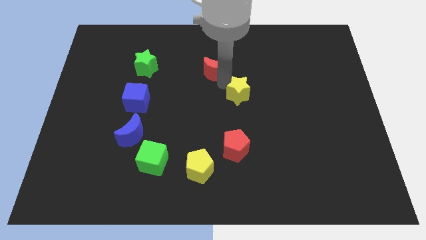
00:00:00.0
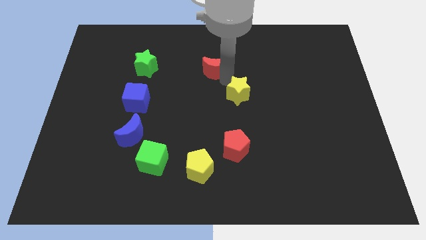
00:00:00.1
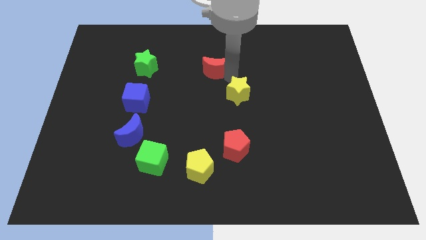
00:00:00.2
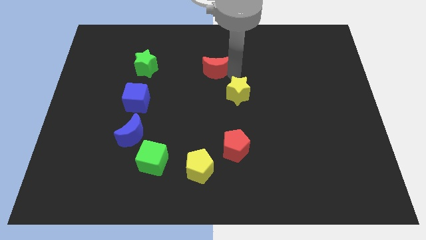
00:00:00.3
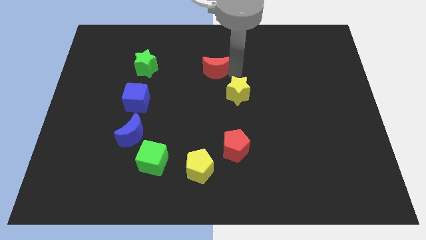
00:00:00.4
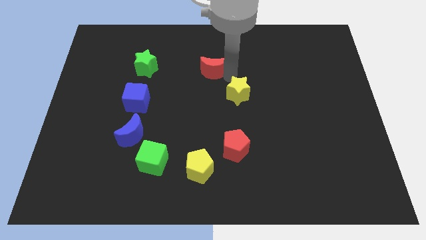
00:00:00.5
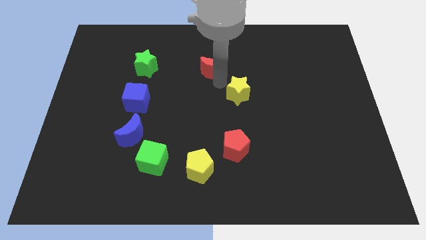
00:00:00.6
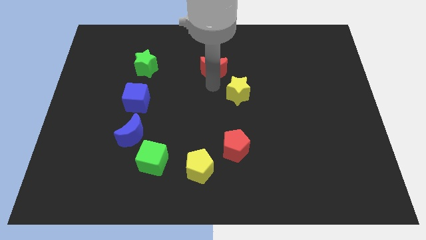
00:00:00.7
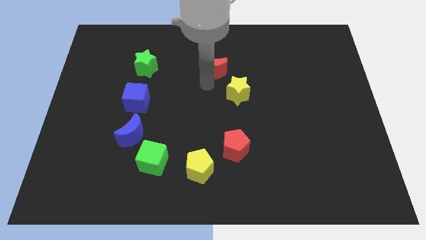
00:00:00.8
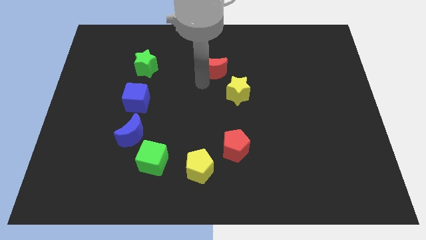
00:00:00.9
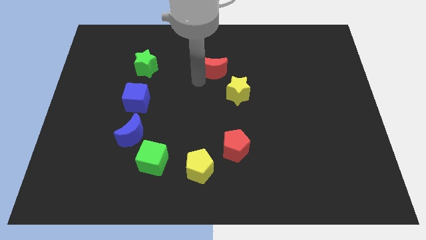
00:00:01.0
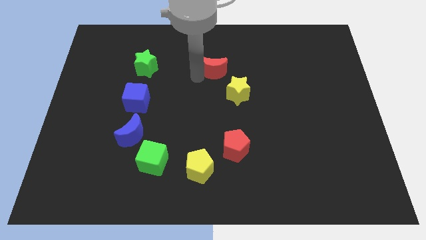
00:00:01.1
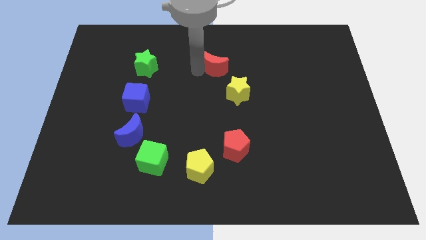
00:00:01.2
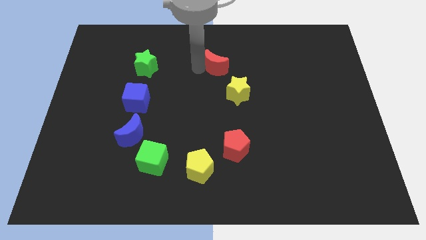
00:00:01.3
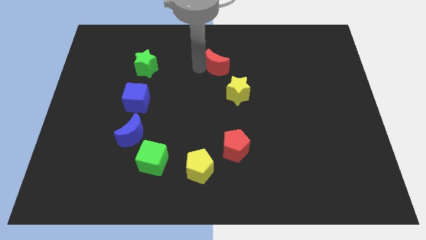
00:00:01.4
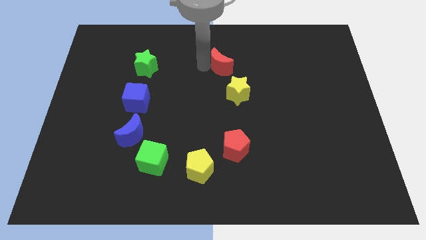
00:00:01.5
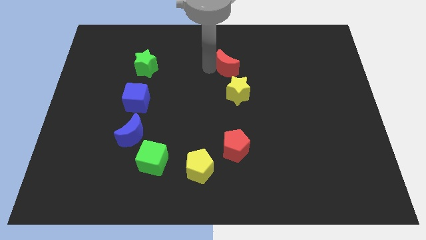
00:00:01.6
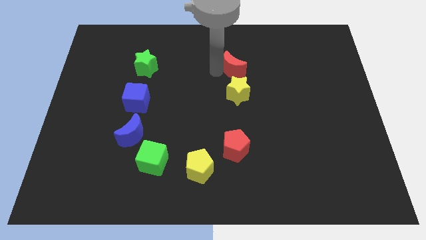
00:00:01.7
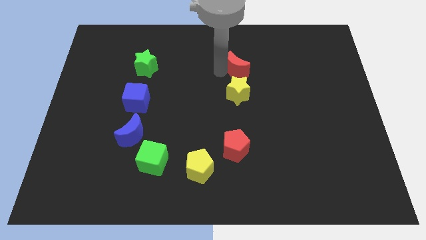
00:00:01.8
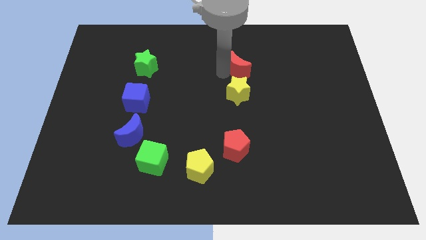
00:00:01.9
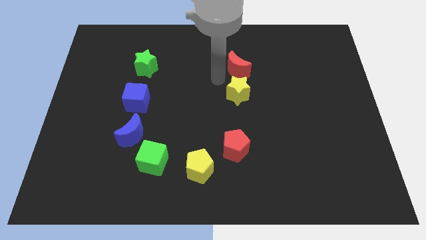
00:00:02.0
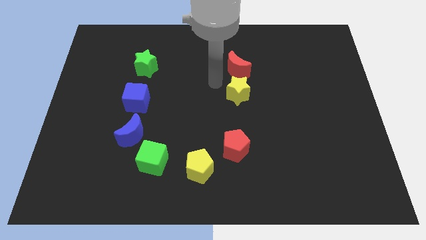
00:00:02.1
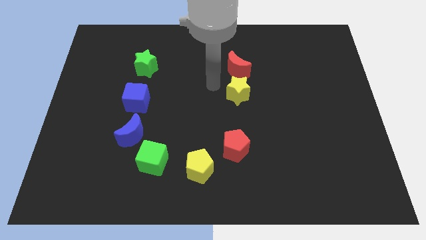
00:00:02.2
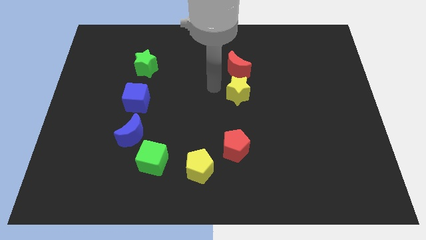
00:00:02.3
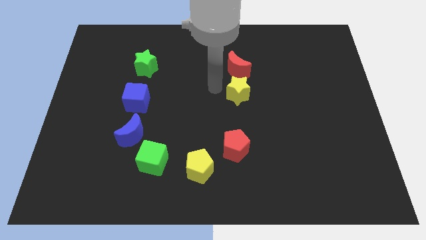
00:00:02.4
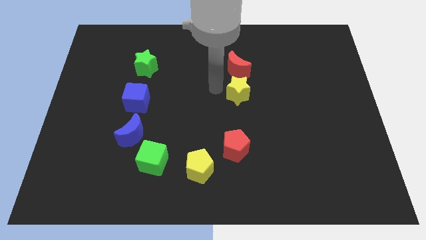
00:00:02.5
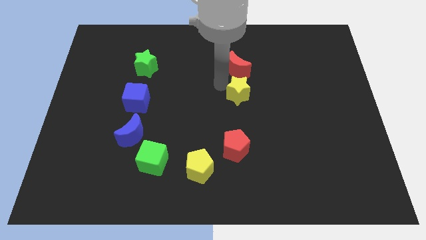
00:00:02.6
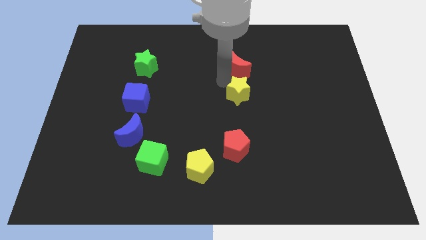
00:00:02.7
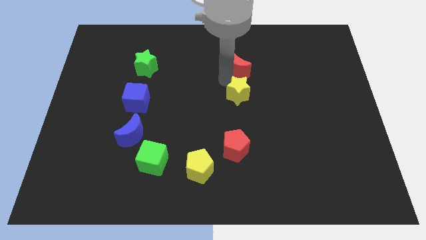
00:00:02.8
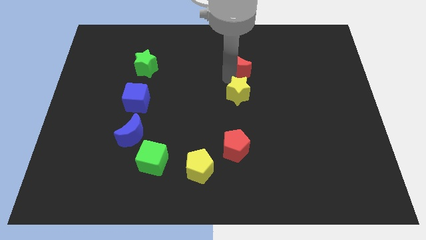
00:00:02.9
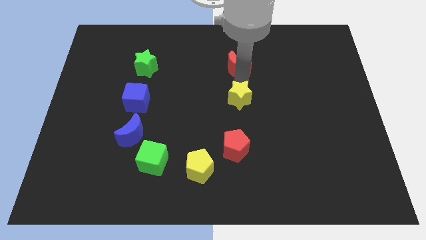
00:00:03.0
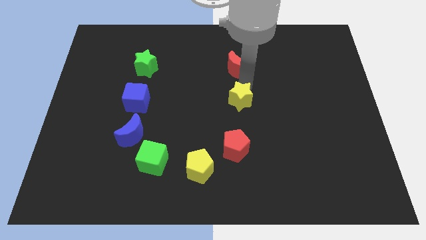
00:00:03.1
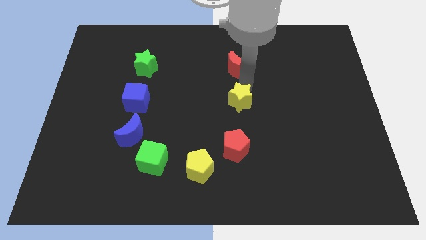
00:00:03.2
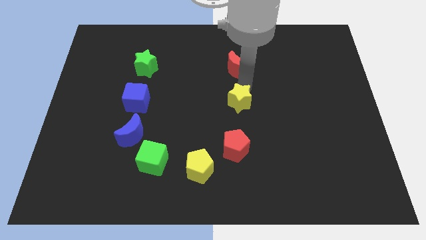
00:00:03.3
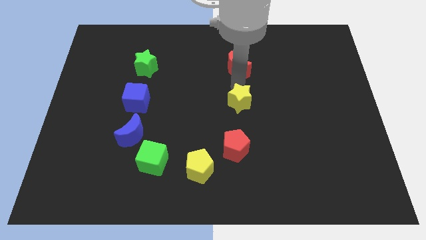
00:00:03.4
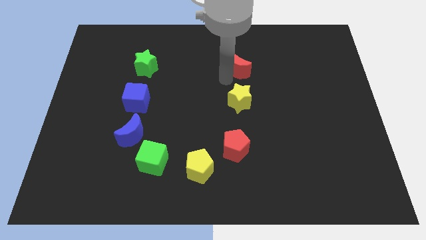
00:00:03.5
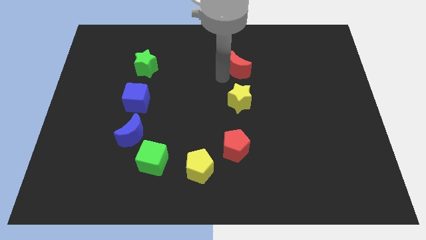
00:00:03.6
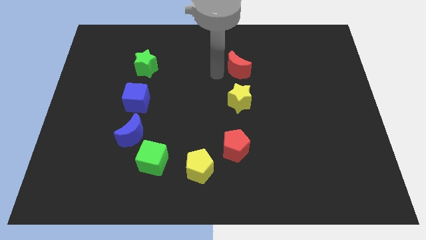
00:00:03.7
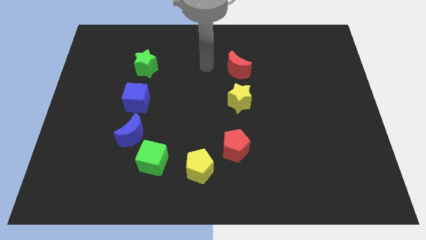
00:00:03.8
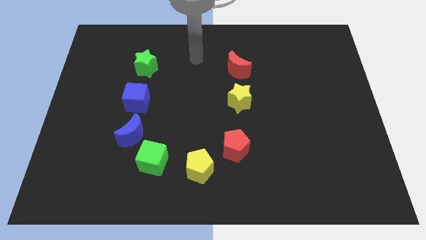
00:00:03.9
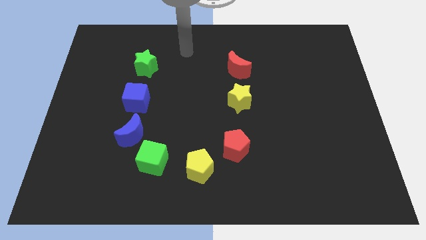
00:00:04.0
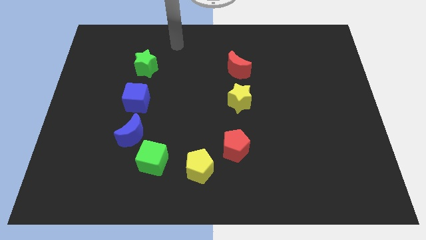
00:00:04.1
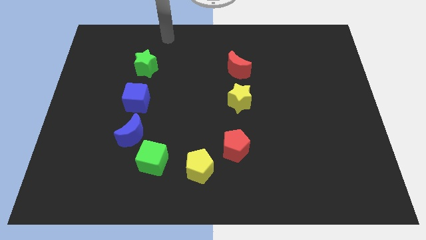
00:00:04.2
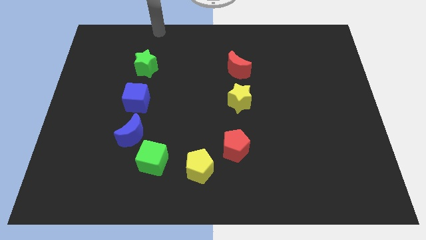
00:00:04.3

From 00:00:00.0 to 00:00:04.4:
separate the red crescent and the yellow star

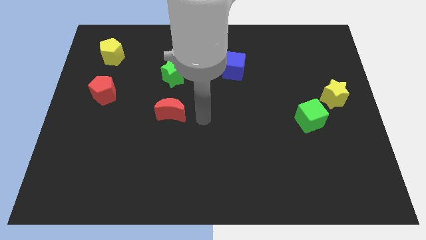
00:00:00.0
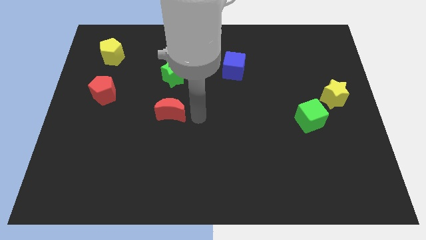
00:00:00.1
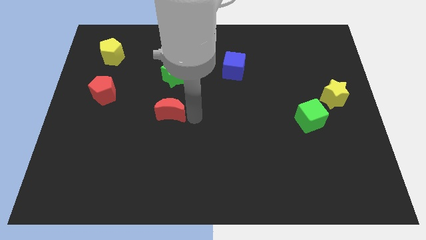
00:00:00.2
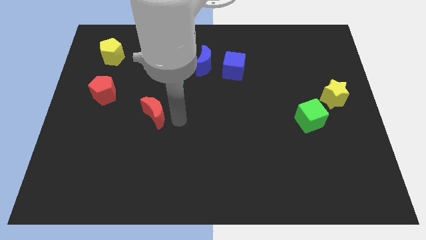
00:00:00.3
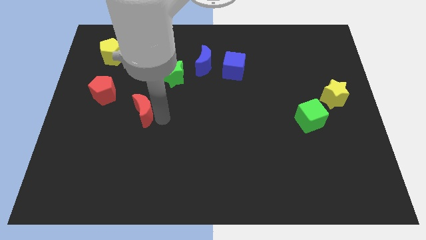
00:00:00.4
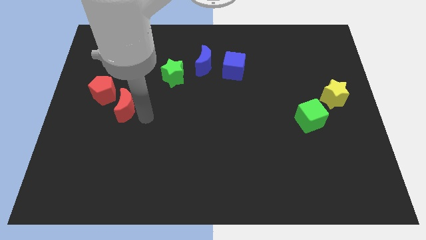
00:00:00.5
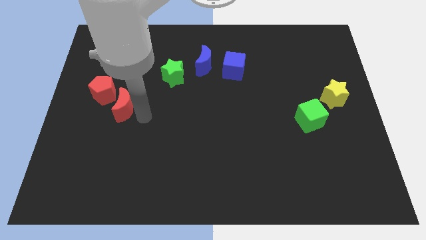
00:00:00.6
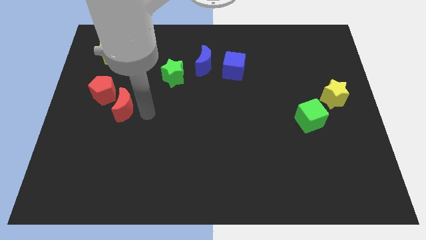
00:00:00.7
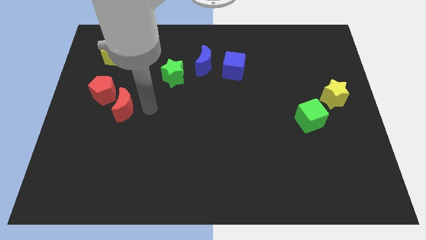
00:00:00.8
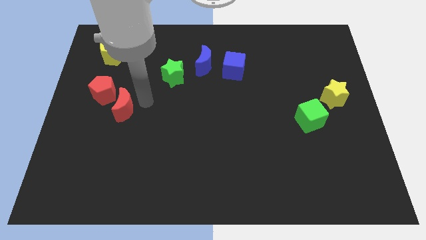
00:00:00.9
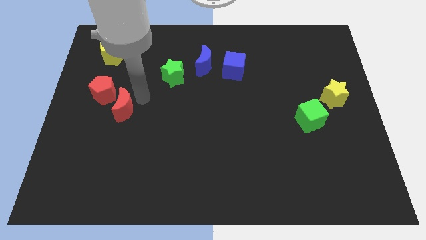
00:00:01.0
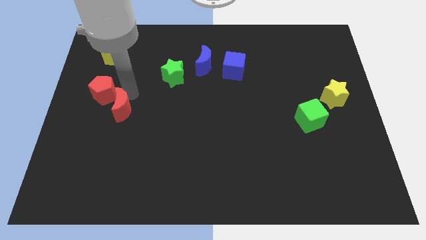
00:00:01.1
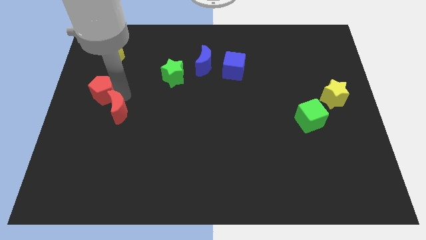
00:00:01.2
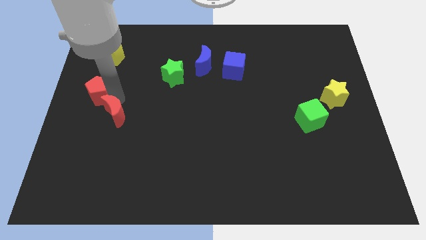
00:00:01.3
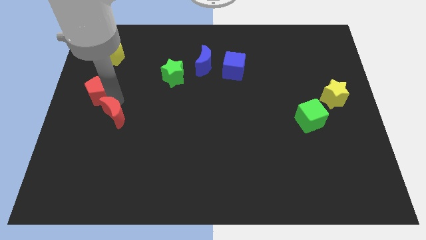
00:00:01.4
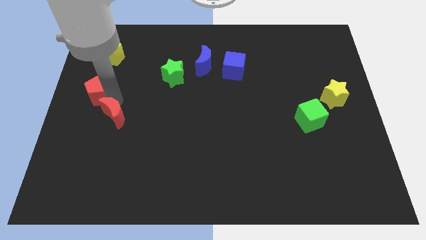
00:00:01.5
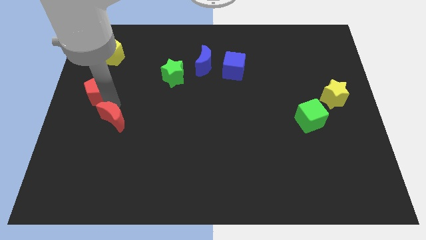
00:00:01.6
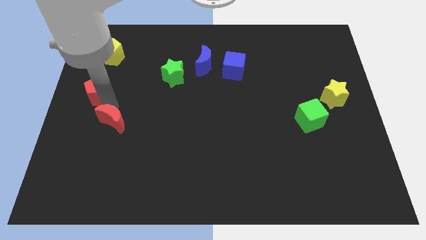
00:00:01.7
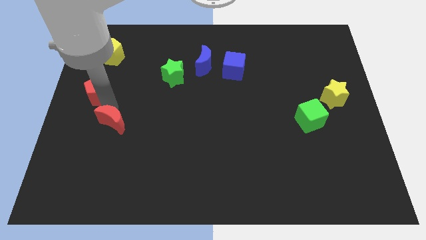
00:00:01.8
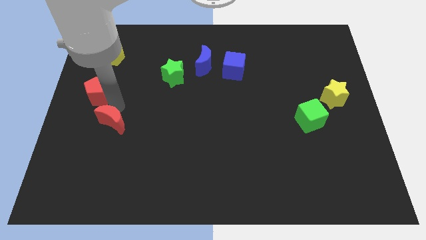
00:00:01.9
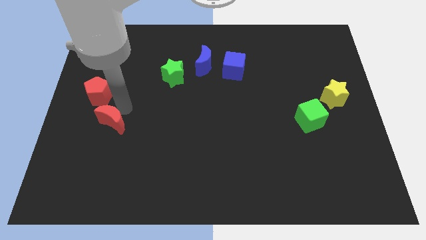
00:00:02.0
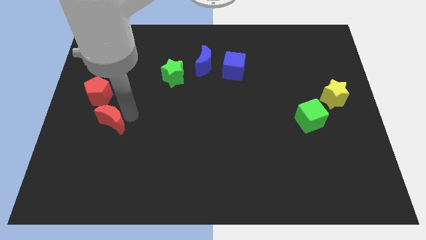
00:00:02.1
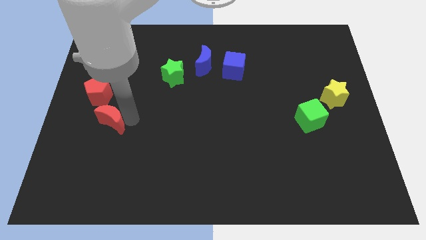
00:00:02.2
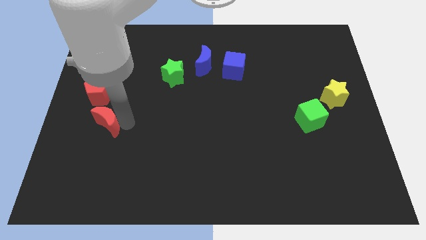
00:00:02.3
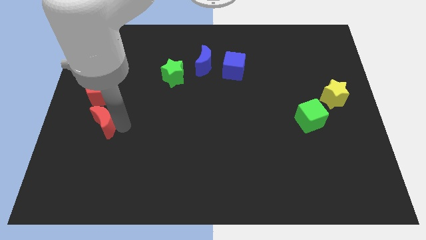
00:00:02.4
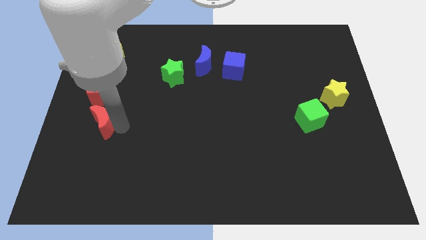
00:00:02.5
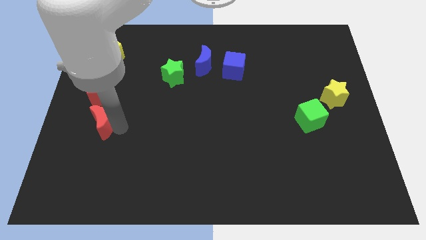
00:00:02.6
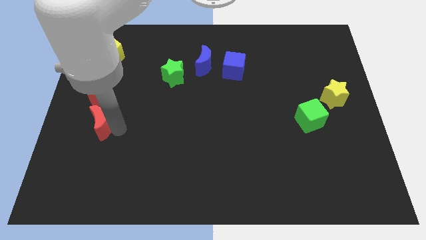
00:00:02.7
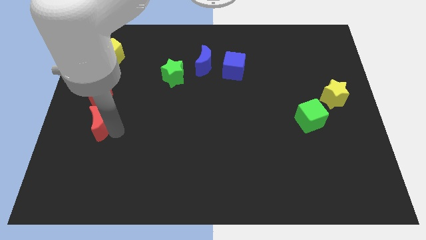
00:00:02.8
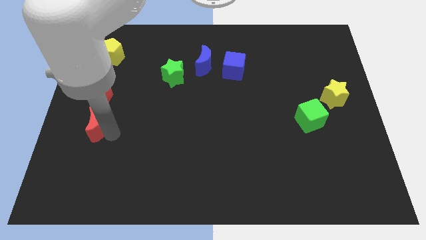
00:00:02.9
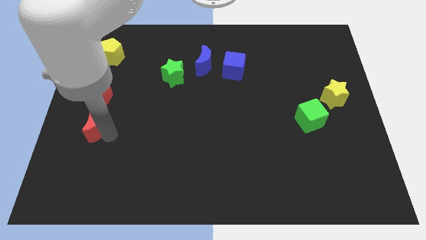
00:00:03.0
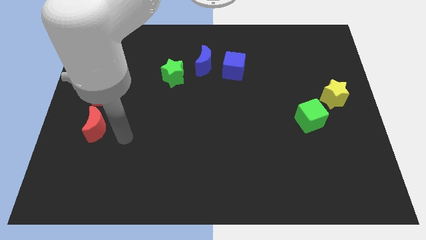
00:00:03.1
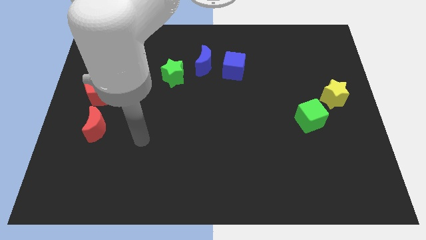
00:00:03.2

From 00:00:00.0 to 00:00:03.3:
slide the red crescent towards the bottom of the red pentagon

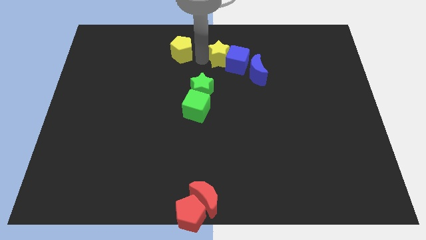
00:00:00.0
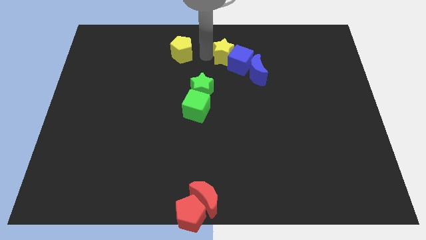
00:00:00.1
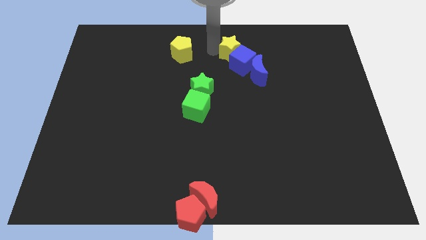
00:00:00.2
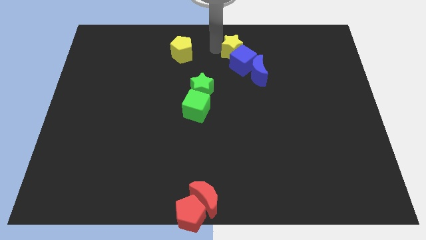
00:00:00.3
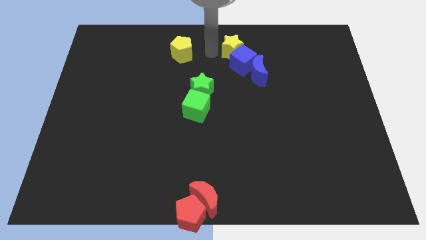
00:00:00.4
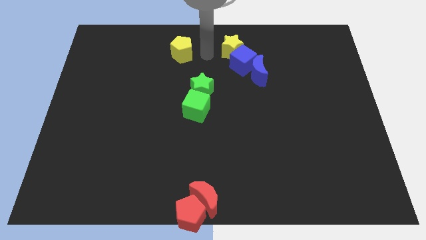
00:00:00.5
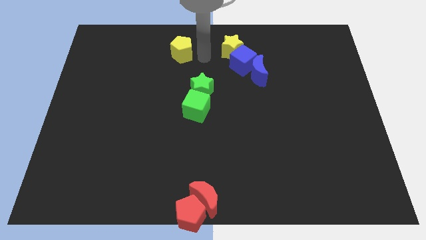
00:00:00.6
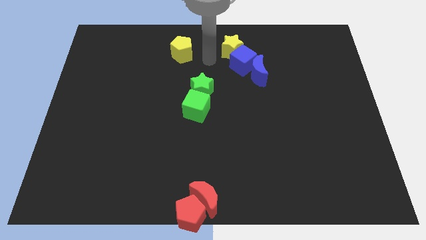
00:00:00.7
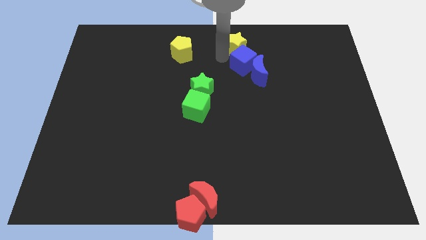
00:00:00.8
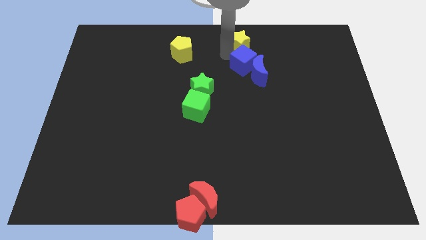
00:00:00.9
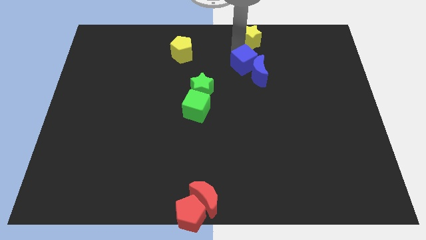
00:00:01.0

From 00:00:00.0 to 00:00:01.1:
slide yellow star on top of blue cube
